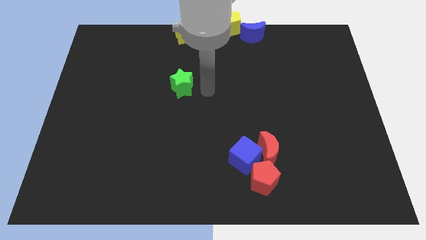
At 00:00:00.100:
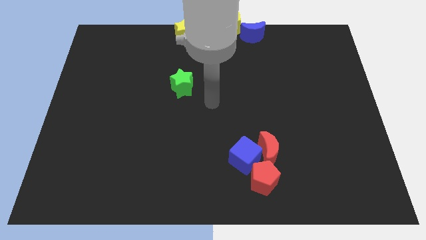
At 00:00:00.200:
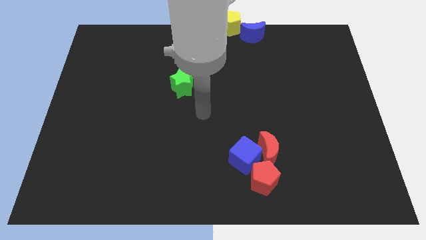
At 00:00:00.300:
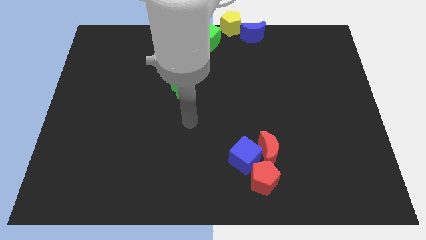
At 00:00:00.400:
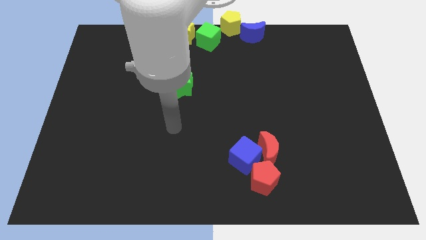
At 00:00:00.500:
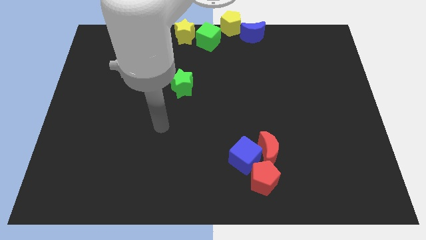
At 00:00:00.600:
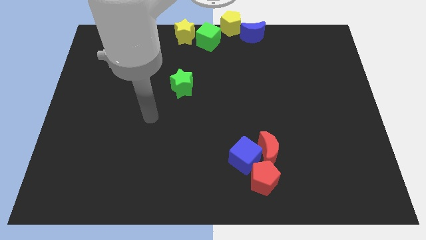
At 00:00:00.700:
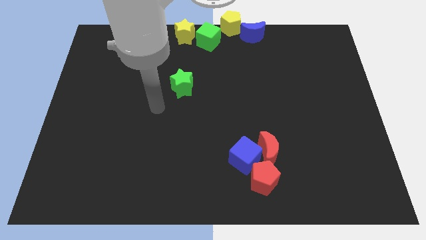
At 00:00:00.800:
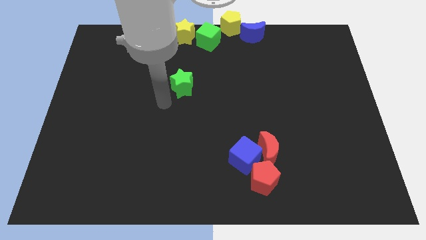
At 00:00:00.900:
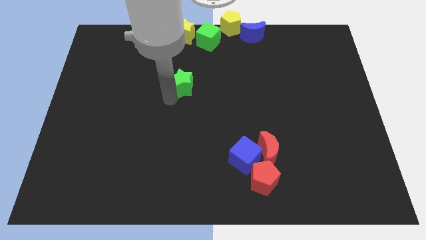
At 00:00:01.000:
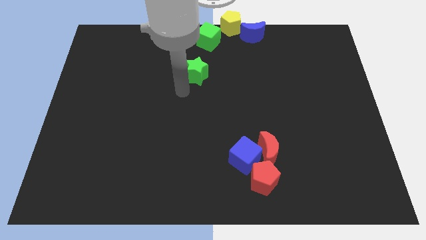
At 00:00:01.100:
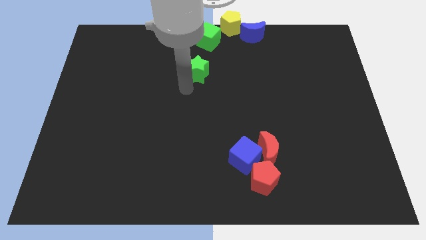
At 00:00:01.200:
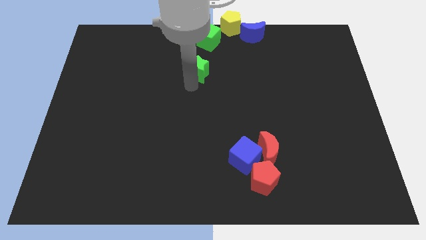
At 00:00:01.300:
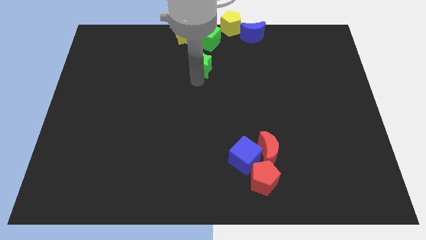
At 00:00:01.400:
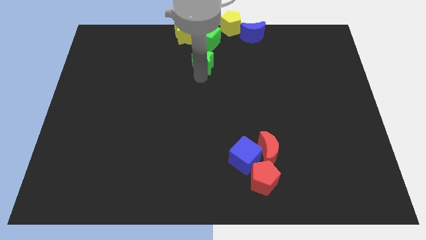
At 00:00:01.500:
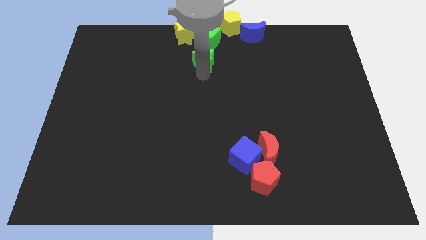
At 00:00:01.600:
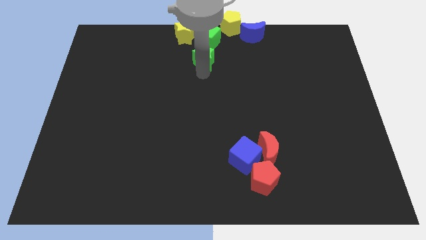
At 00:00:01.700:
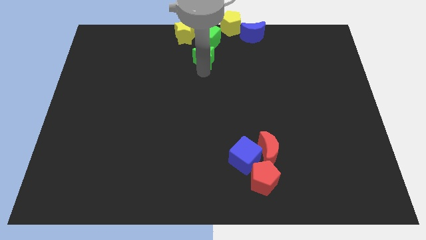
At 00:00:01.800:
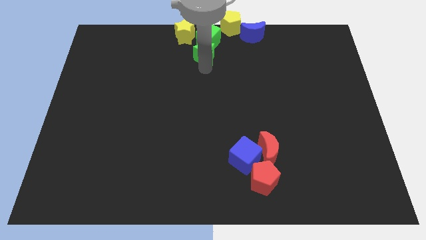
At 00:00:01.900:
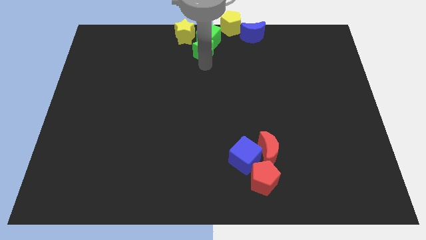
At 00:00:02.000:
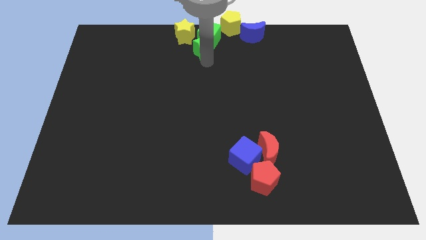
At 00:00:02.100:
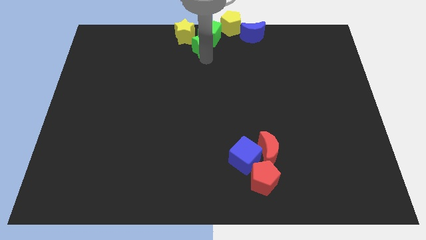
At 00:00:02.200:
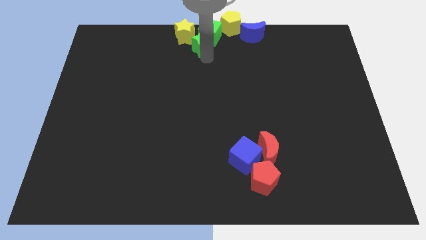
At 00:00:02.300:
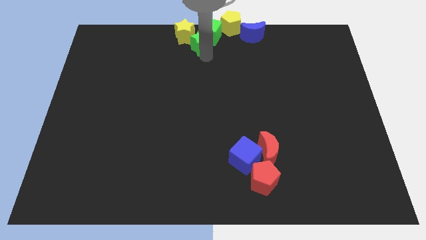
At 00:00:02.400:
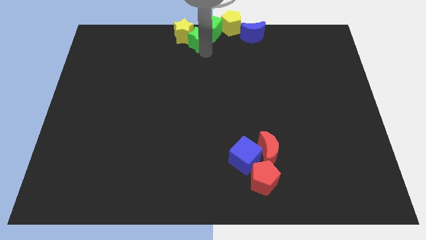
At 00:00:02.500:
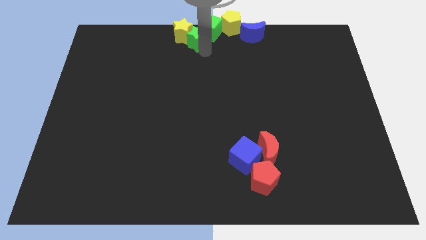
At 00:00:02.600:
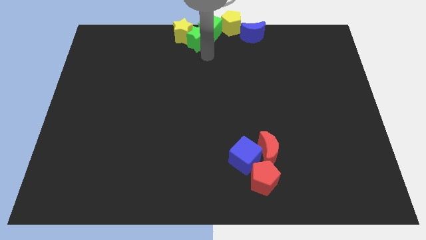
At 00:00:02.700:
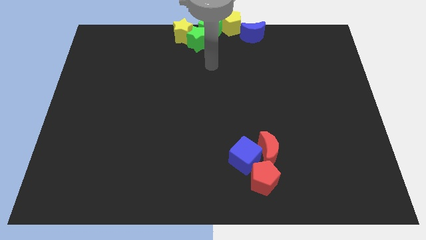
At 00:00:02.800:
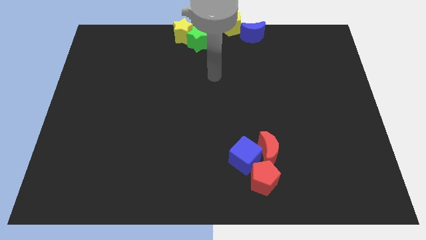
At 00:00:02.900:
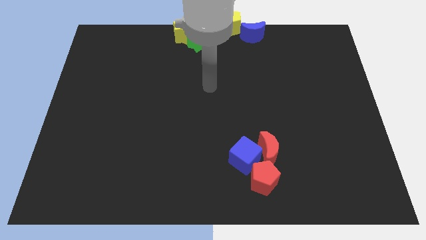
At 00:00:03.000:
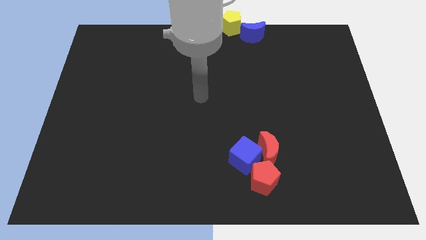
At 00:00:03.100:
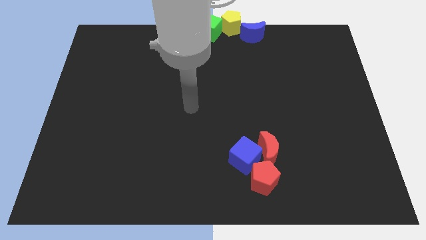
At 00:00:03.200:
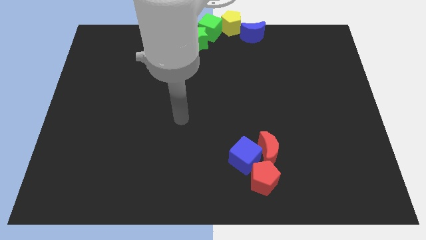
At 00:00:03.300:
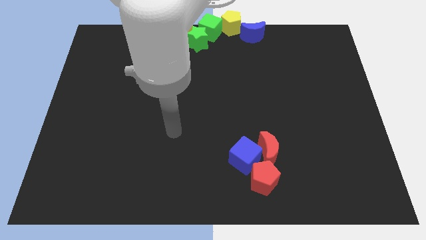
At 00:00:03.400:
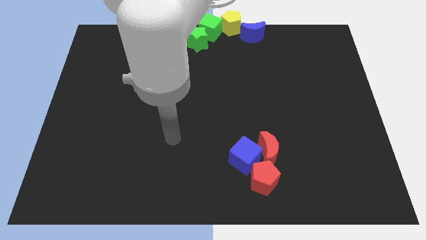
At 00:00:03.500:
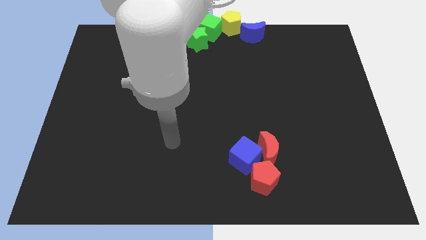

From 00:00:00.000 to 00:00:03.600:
push the green star into the green cube

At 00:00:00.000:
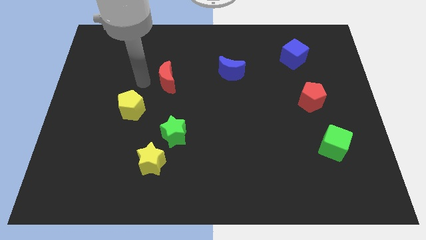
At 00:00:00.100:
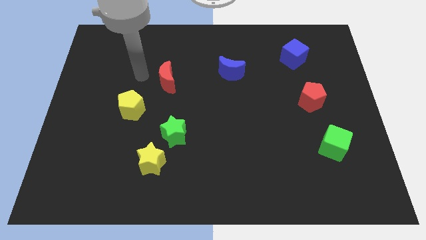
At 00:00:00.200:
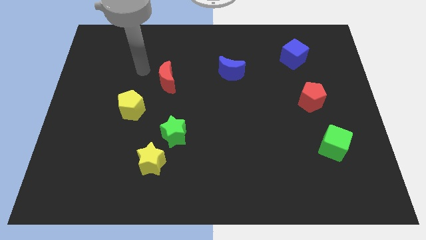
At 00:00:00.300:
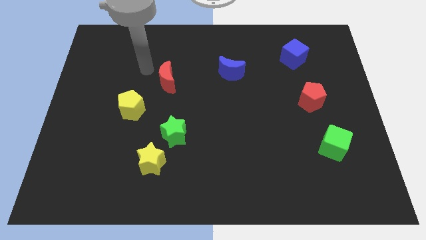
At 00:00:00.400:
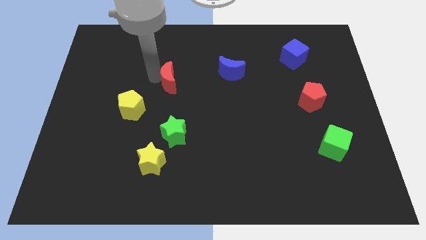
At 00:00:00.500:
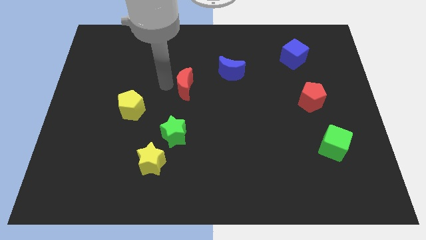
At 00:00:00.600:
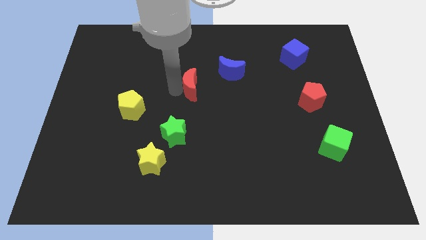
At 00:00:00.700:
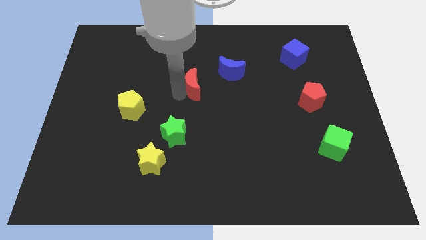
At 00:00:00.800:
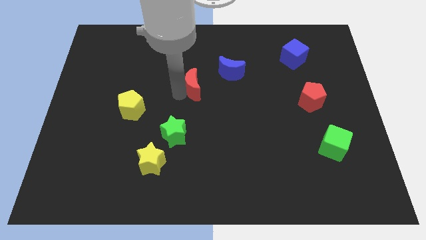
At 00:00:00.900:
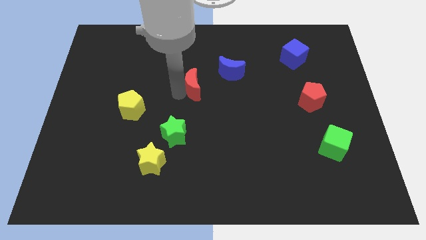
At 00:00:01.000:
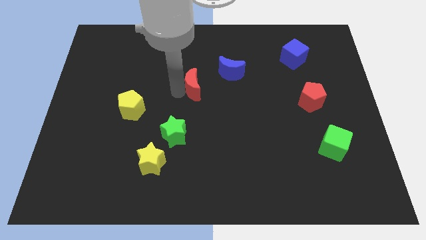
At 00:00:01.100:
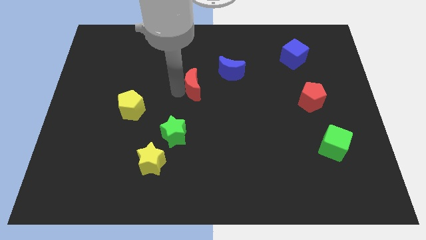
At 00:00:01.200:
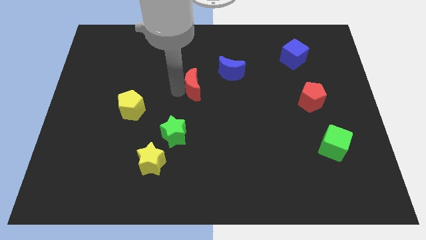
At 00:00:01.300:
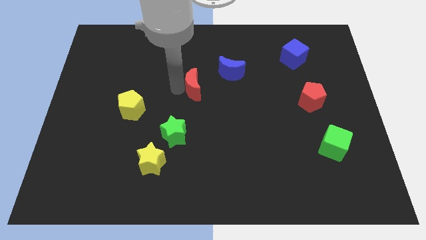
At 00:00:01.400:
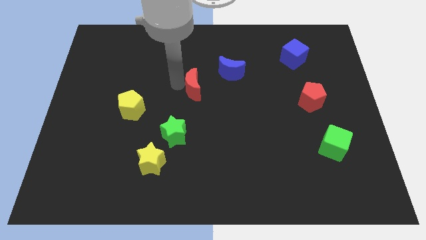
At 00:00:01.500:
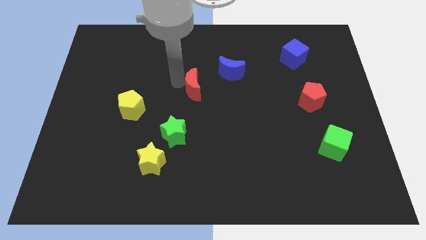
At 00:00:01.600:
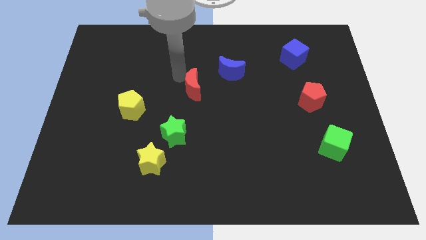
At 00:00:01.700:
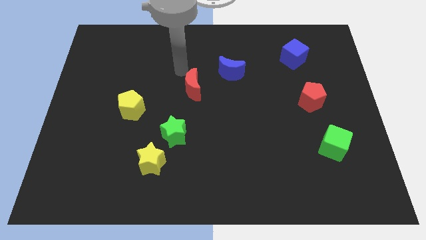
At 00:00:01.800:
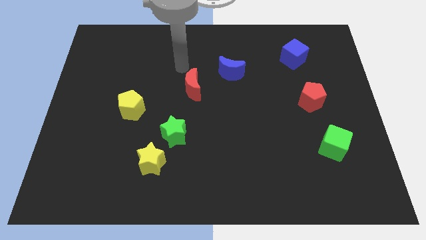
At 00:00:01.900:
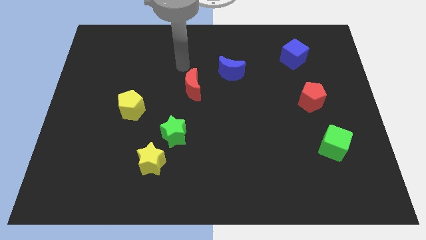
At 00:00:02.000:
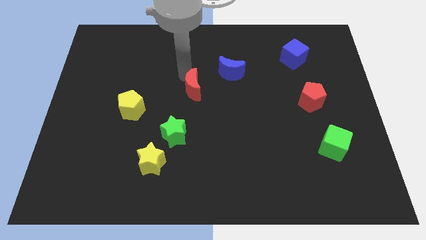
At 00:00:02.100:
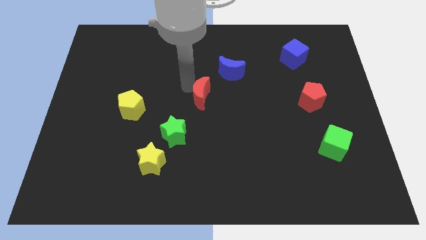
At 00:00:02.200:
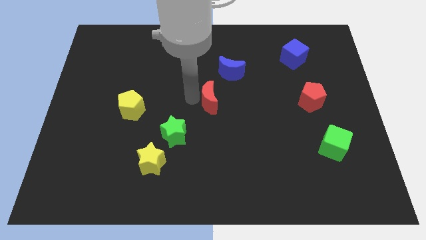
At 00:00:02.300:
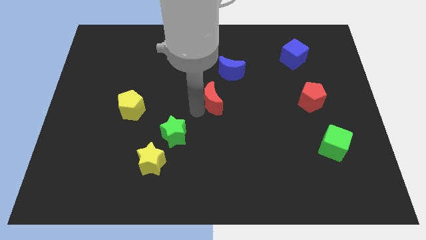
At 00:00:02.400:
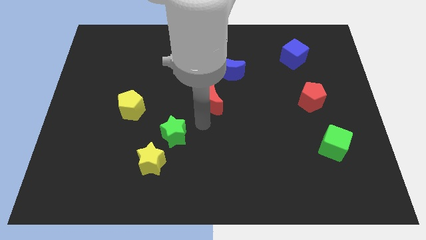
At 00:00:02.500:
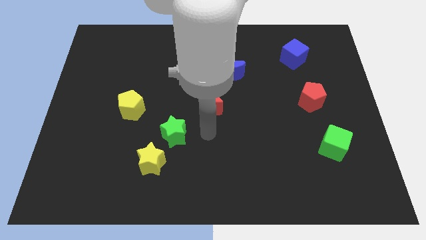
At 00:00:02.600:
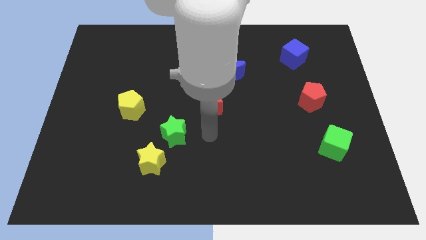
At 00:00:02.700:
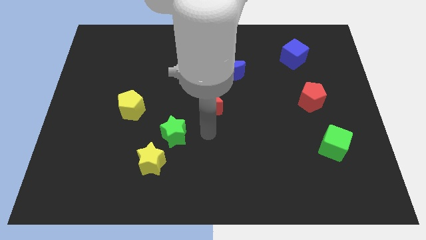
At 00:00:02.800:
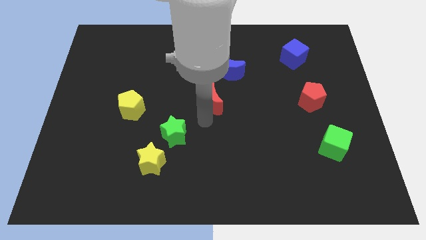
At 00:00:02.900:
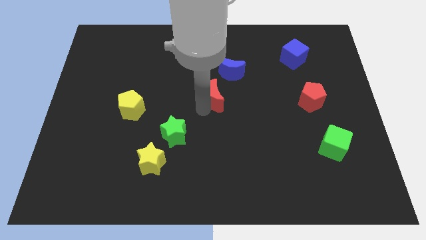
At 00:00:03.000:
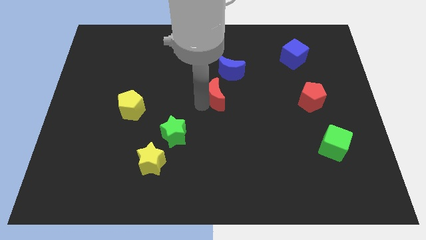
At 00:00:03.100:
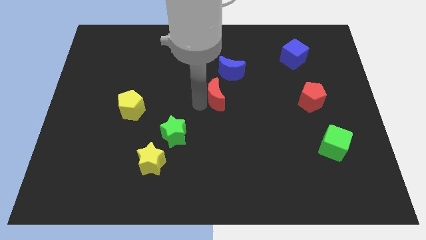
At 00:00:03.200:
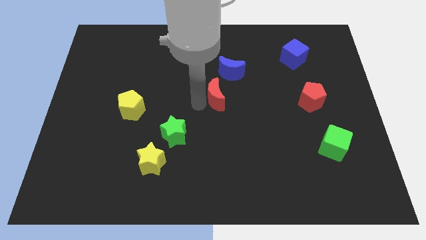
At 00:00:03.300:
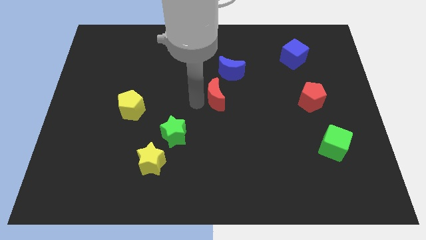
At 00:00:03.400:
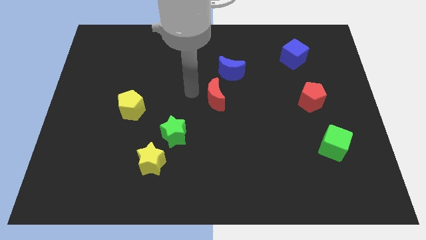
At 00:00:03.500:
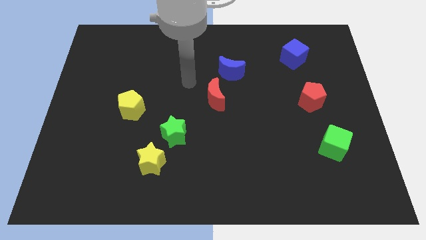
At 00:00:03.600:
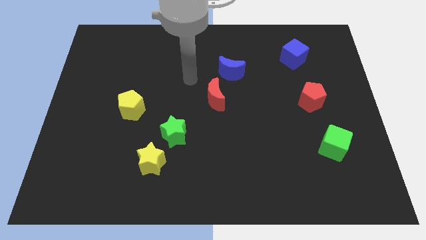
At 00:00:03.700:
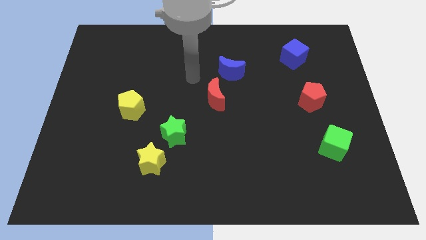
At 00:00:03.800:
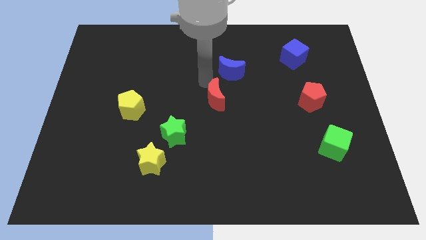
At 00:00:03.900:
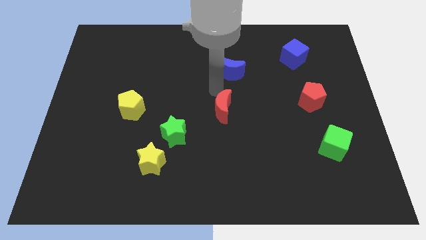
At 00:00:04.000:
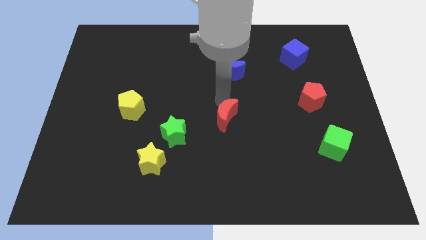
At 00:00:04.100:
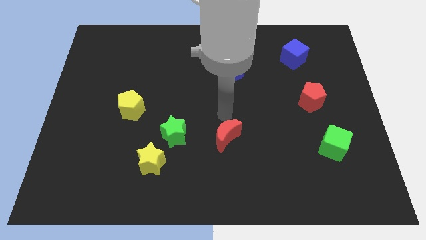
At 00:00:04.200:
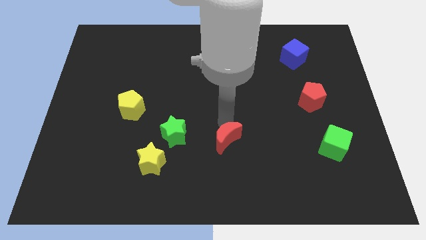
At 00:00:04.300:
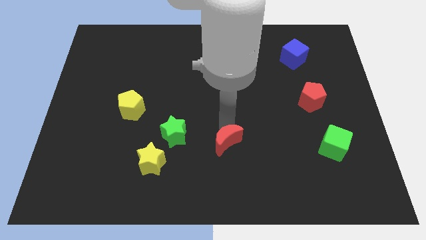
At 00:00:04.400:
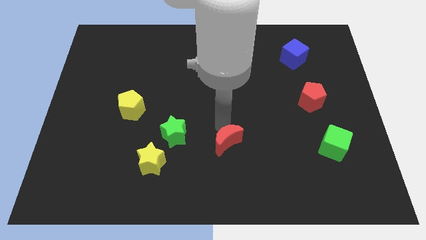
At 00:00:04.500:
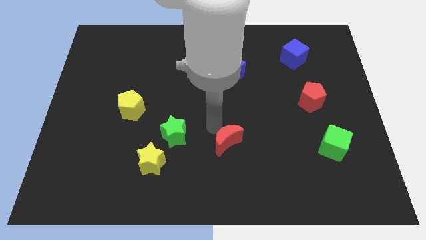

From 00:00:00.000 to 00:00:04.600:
push the red moon vertically below blue moon

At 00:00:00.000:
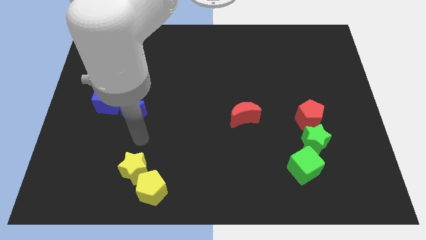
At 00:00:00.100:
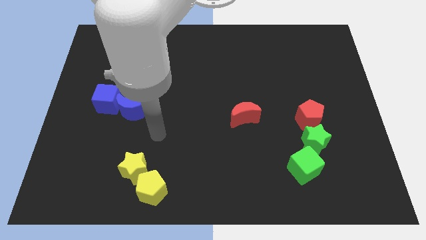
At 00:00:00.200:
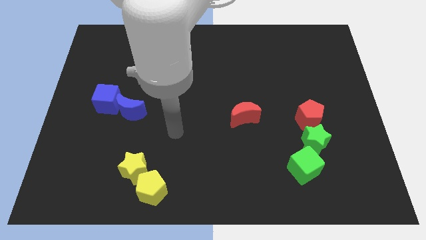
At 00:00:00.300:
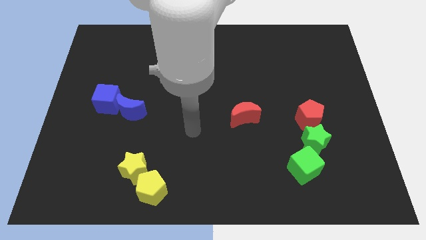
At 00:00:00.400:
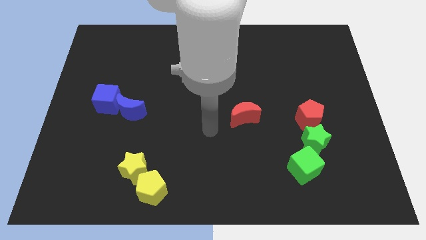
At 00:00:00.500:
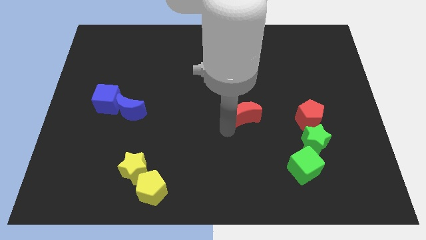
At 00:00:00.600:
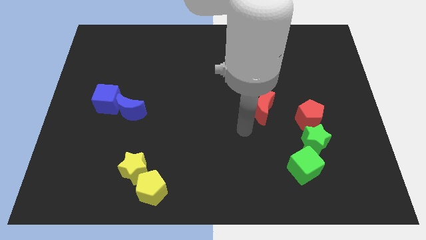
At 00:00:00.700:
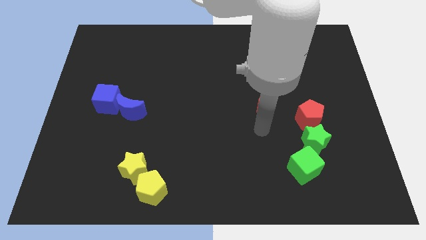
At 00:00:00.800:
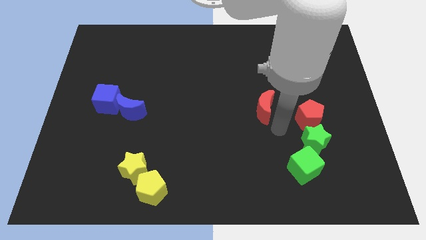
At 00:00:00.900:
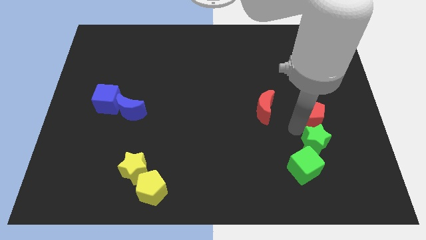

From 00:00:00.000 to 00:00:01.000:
touch the left side of the pentagon
